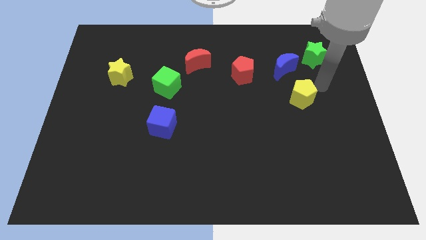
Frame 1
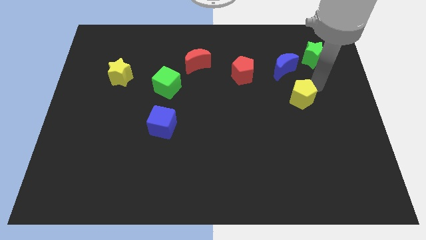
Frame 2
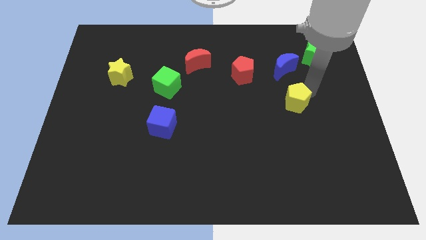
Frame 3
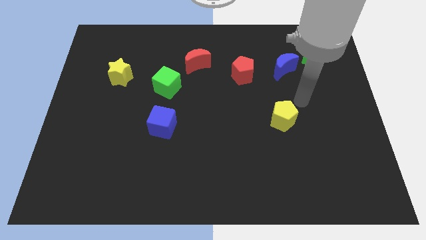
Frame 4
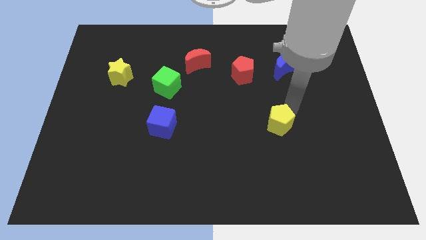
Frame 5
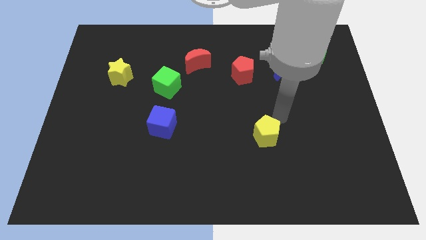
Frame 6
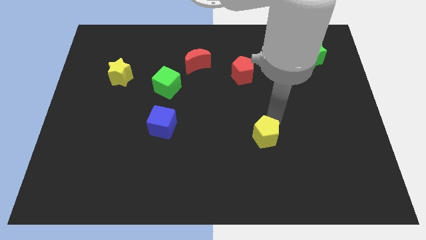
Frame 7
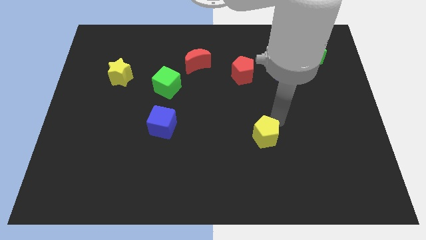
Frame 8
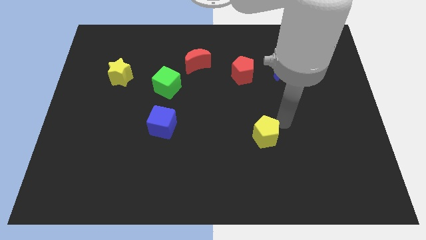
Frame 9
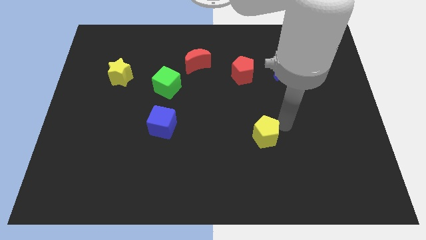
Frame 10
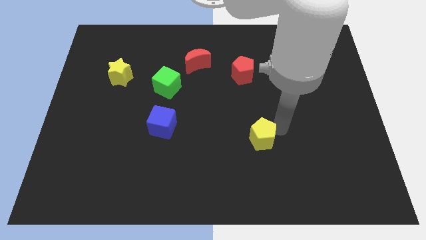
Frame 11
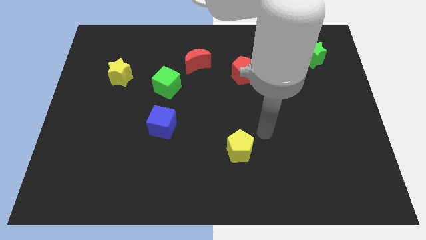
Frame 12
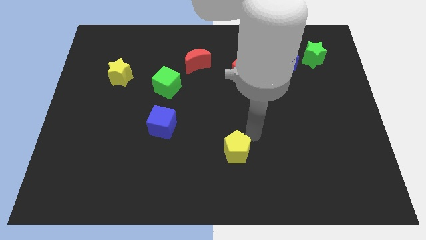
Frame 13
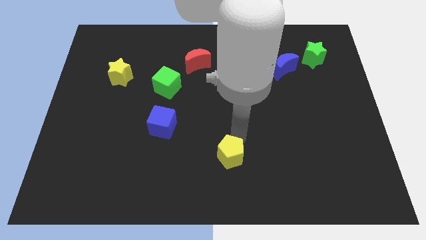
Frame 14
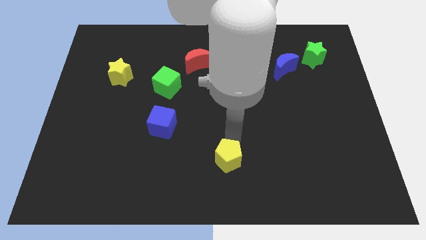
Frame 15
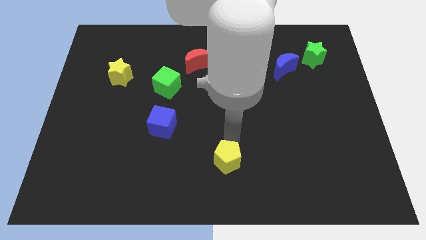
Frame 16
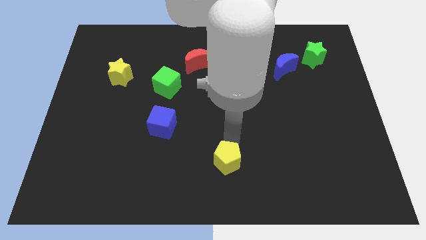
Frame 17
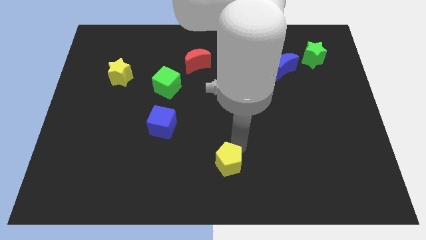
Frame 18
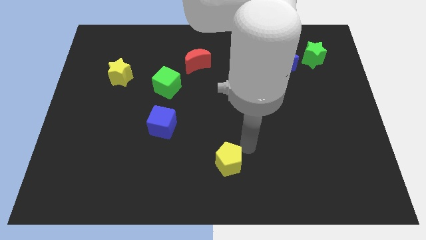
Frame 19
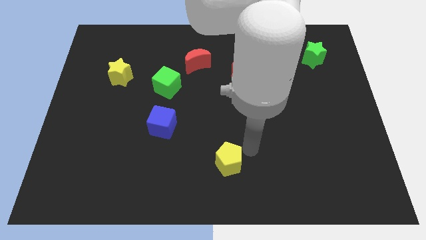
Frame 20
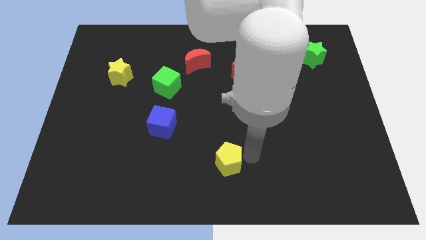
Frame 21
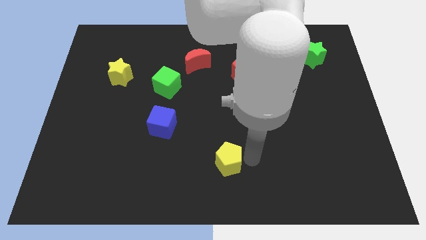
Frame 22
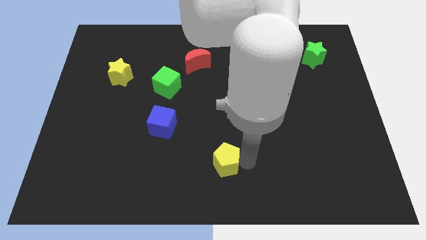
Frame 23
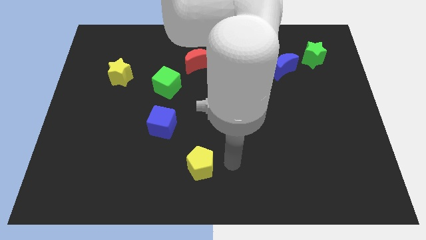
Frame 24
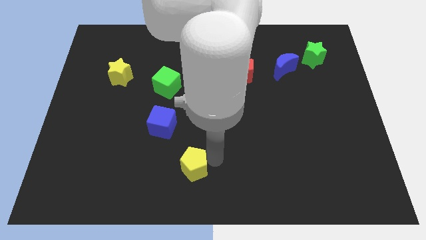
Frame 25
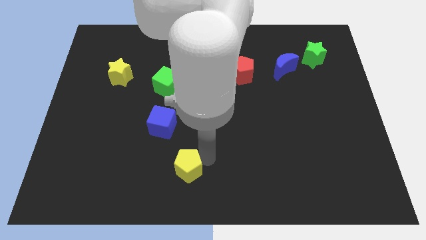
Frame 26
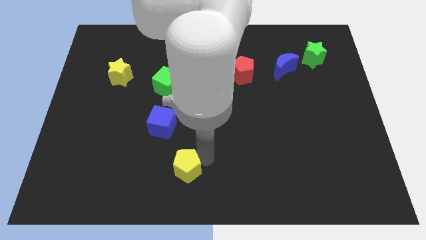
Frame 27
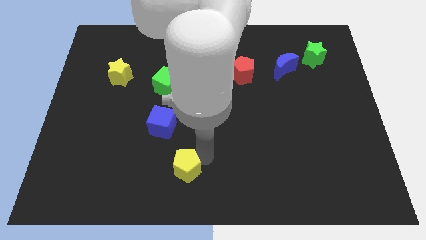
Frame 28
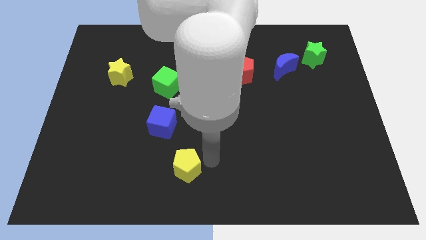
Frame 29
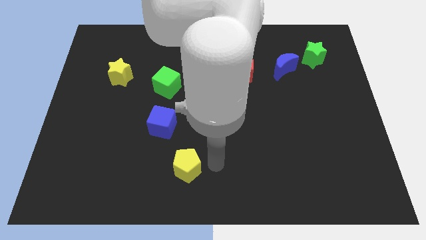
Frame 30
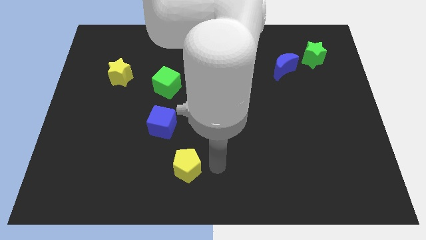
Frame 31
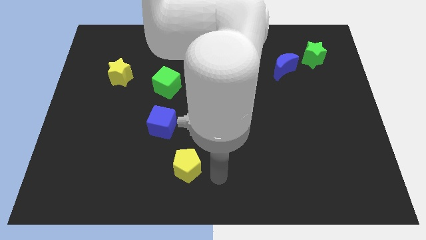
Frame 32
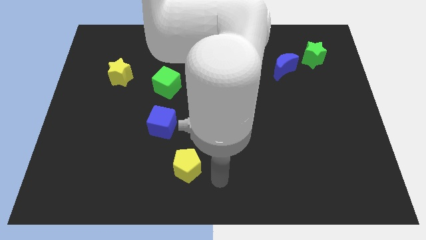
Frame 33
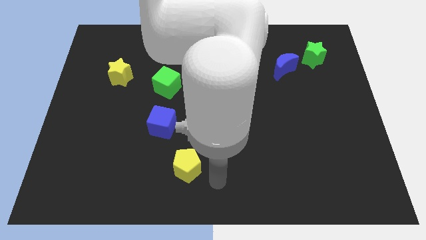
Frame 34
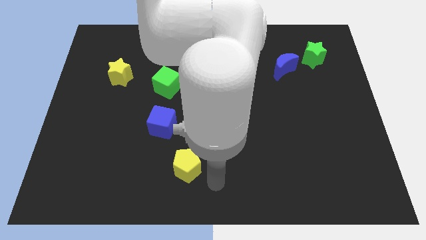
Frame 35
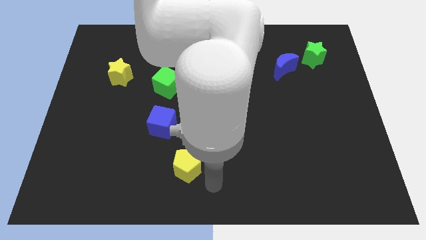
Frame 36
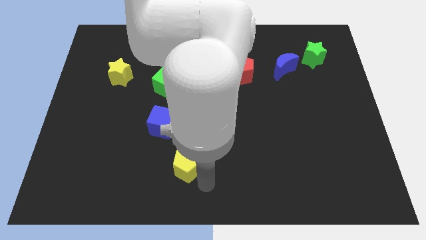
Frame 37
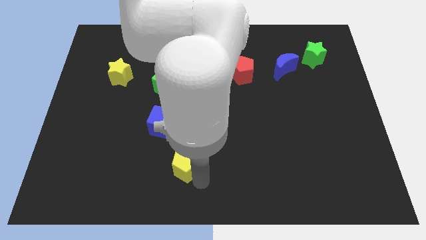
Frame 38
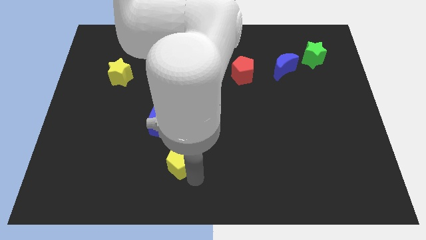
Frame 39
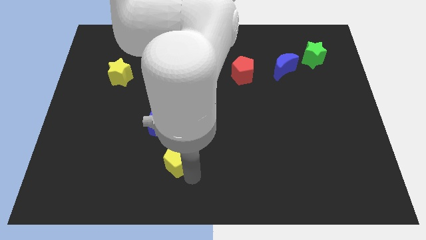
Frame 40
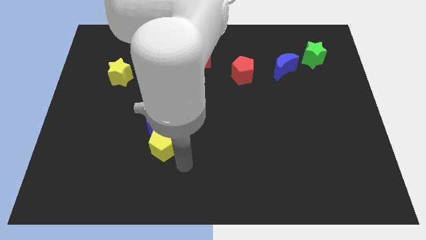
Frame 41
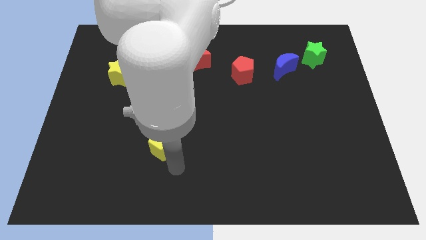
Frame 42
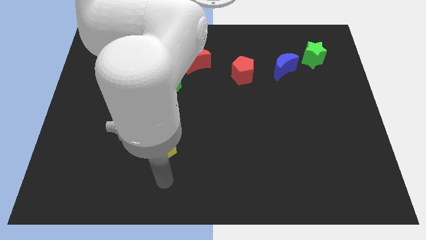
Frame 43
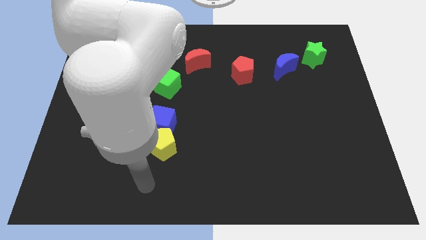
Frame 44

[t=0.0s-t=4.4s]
push the yellow pentagon close to the blue cube

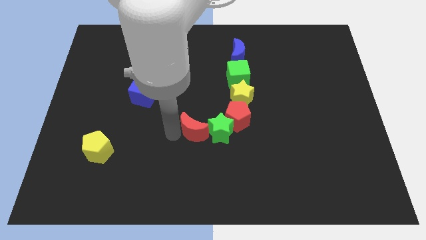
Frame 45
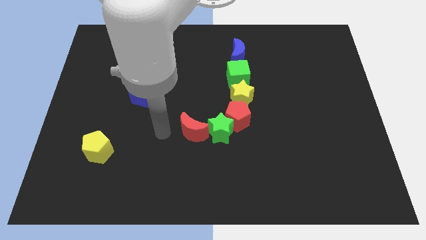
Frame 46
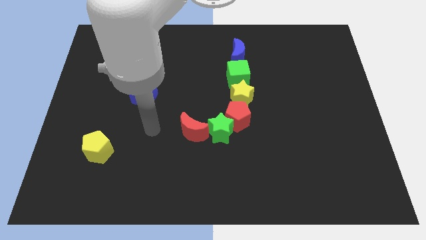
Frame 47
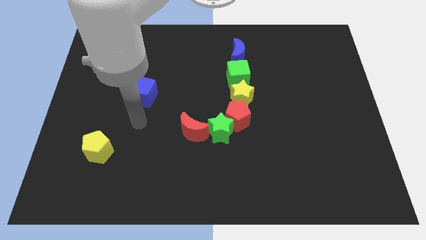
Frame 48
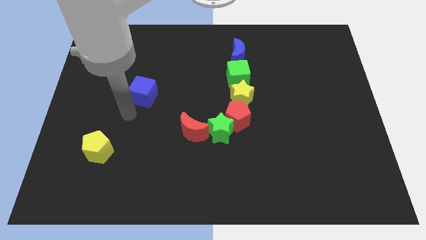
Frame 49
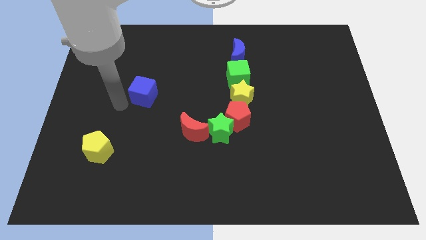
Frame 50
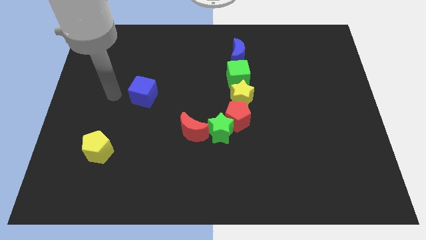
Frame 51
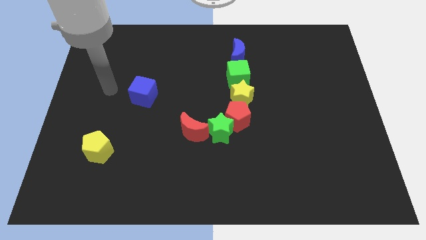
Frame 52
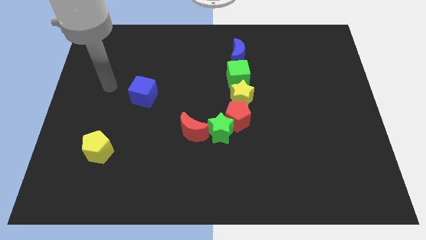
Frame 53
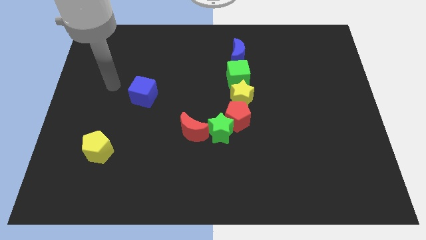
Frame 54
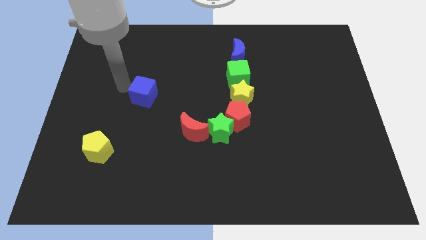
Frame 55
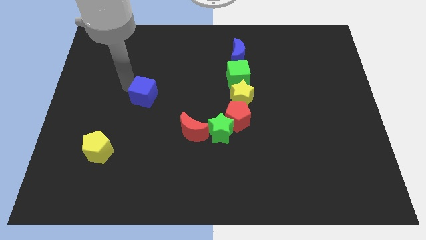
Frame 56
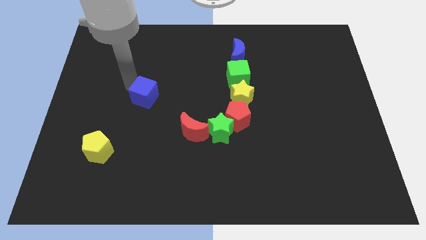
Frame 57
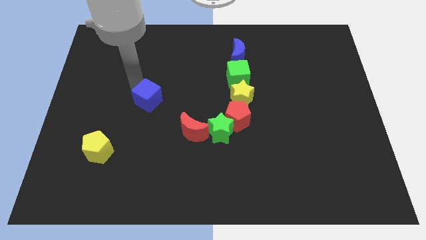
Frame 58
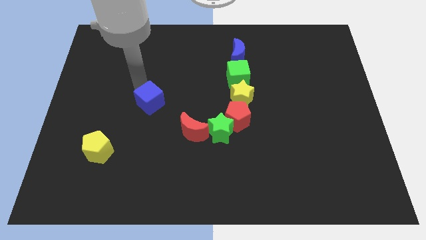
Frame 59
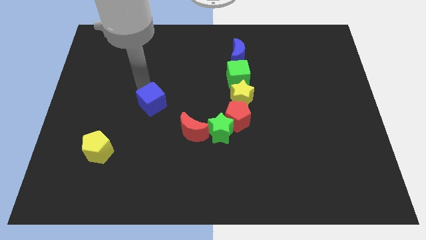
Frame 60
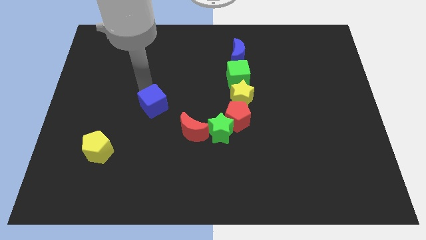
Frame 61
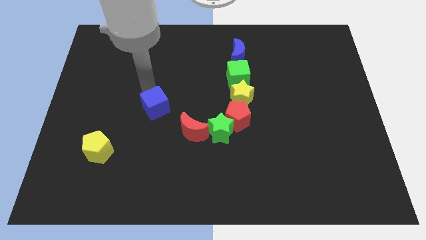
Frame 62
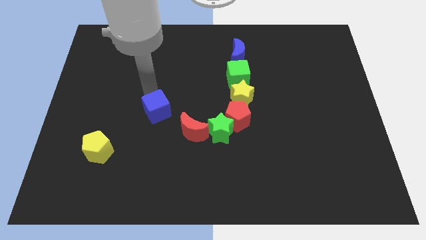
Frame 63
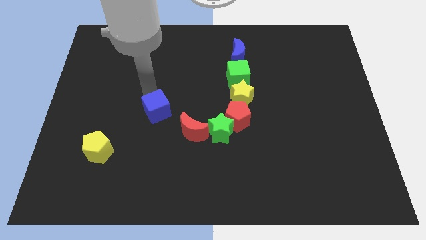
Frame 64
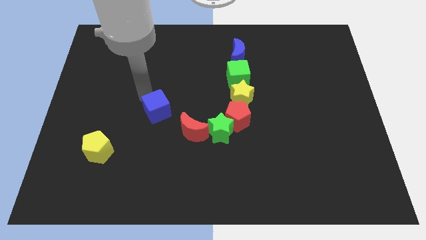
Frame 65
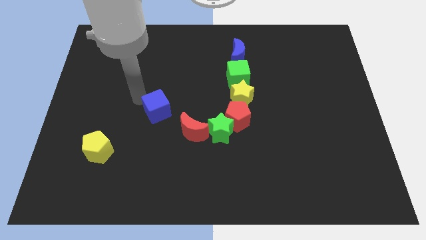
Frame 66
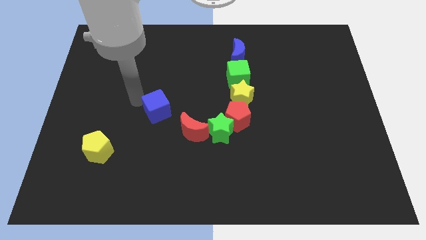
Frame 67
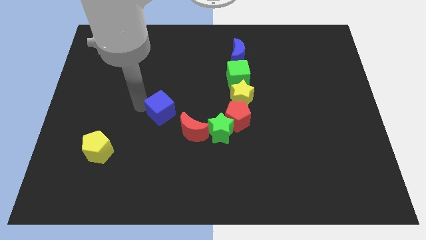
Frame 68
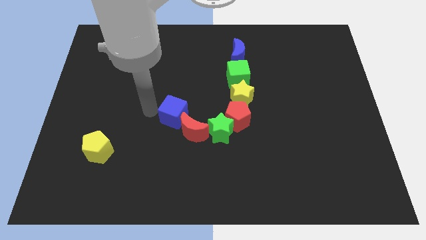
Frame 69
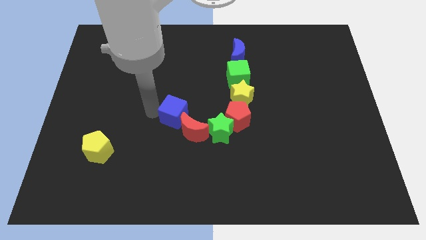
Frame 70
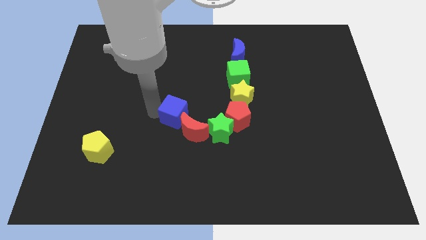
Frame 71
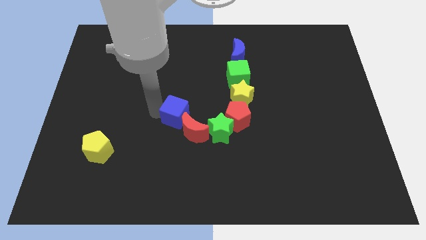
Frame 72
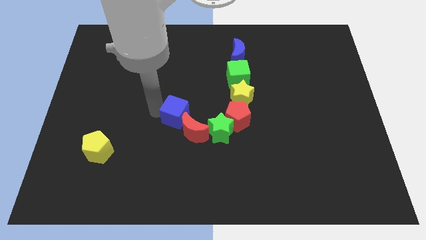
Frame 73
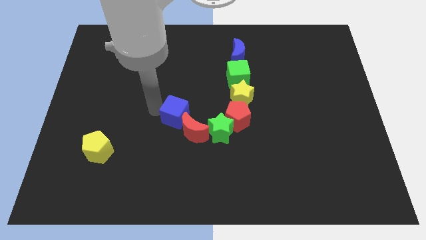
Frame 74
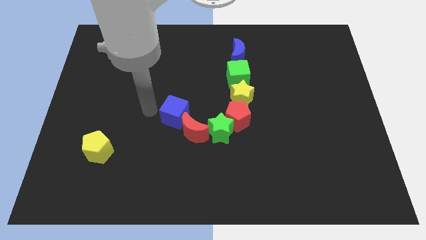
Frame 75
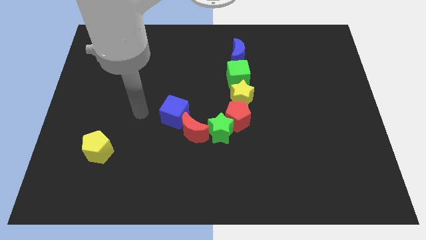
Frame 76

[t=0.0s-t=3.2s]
push the blue cube into the red moon

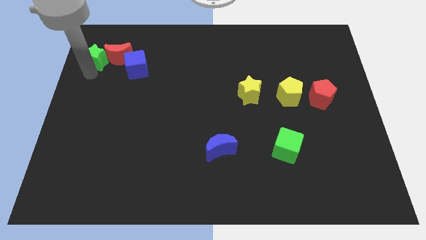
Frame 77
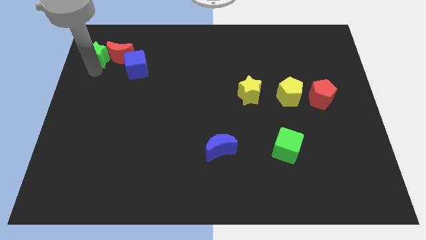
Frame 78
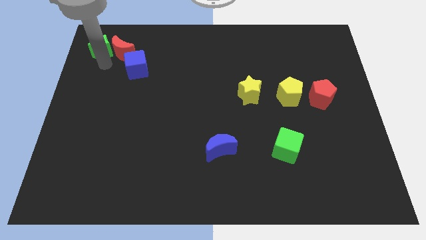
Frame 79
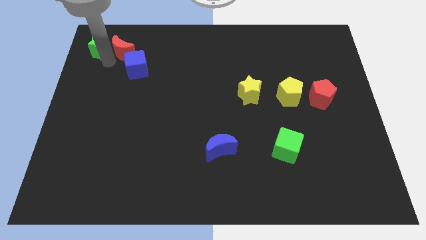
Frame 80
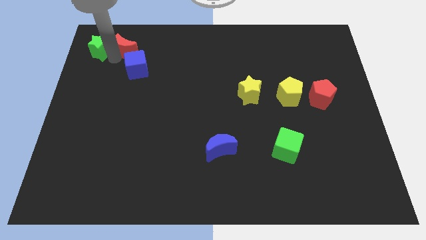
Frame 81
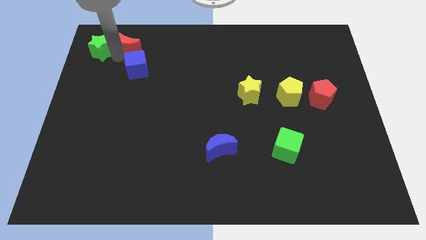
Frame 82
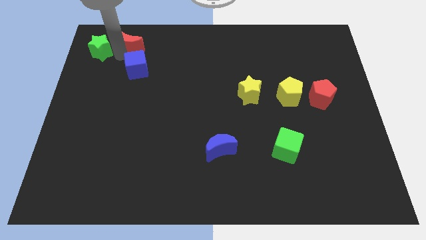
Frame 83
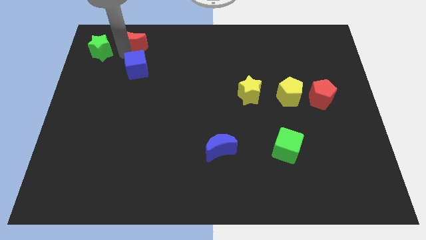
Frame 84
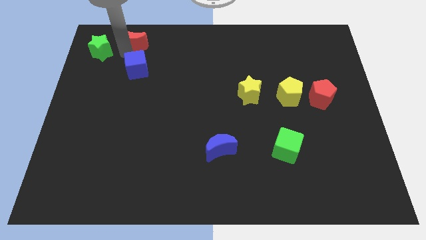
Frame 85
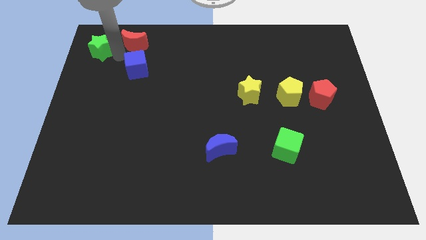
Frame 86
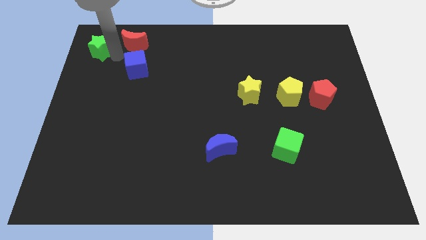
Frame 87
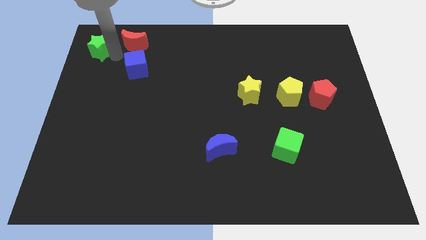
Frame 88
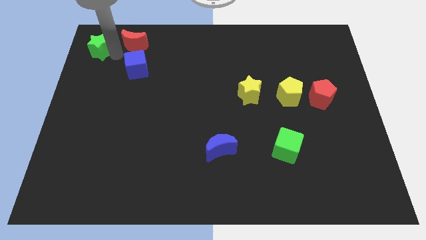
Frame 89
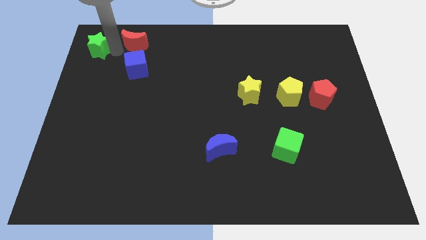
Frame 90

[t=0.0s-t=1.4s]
place your arm in between the green star and red moon
